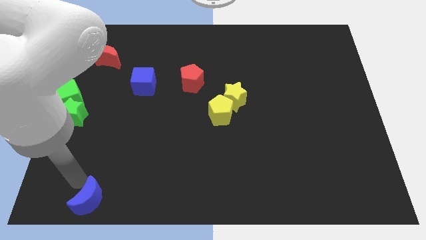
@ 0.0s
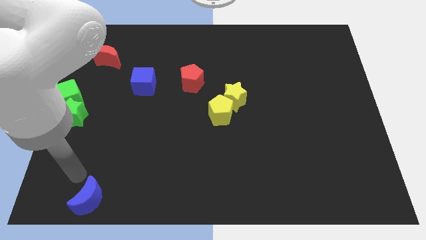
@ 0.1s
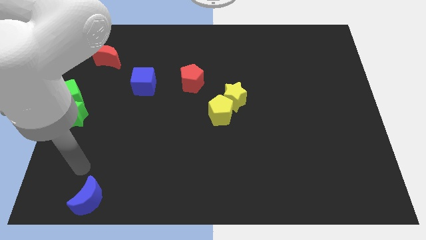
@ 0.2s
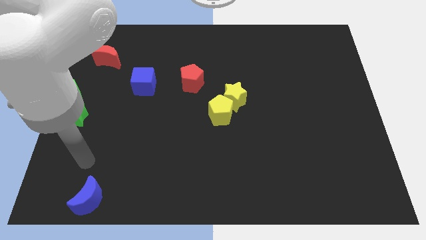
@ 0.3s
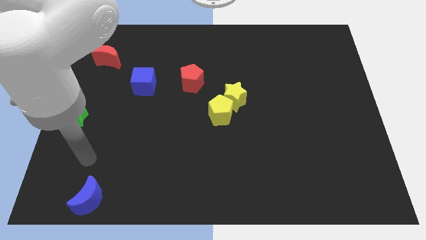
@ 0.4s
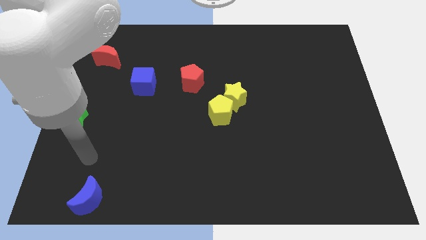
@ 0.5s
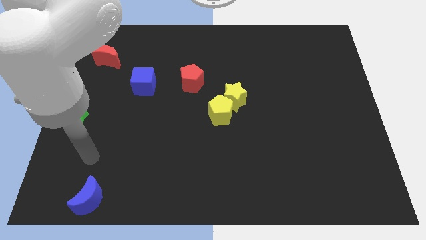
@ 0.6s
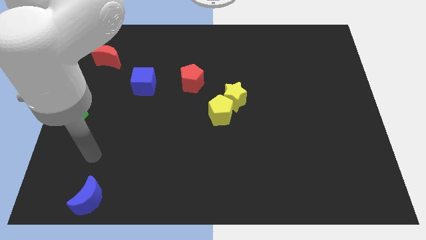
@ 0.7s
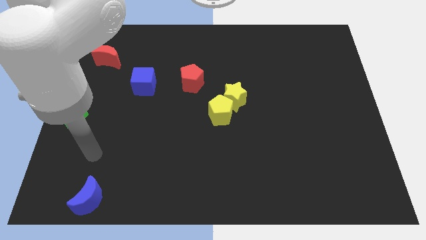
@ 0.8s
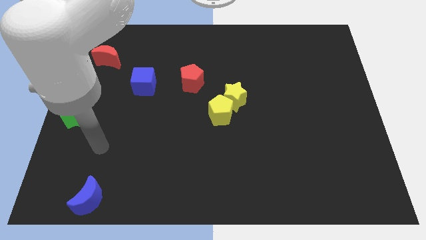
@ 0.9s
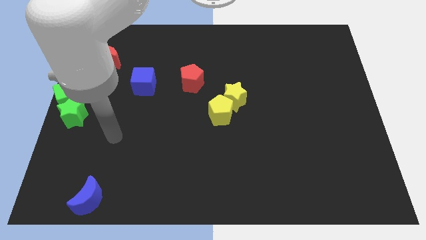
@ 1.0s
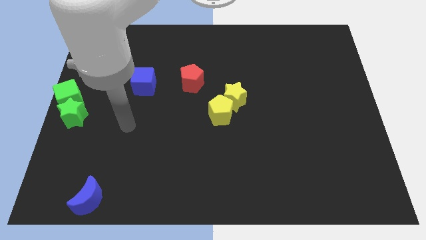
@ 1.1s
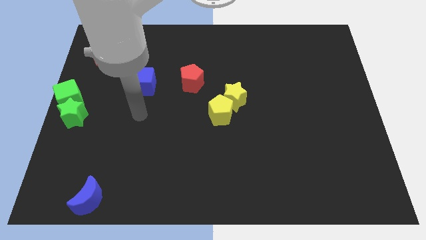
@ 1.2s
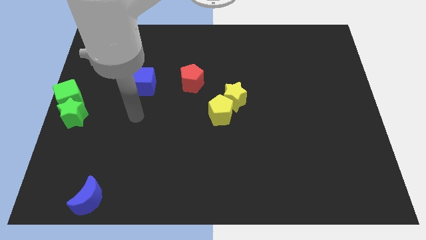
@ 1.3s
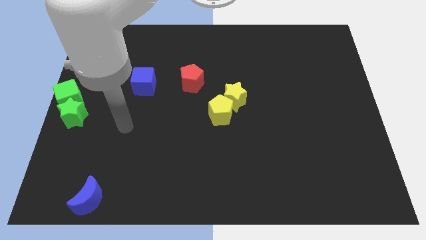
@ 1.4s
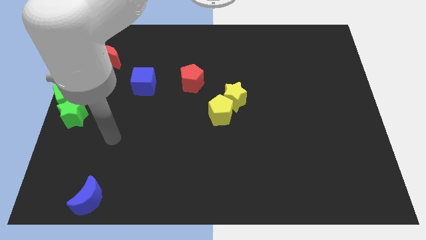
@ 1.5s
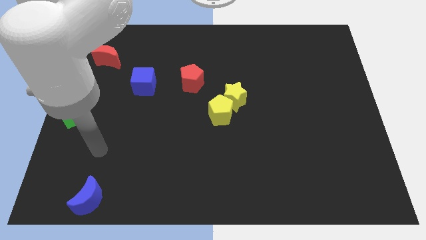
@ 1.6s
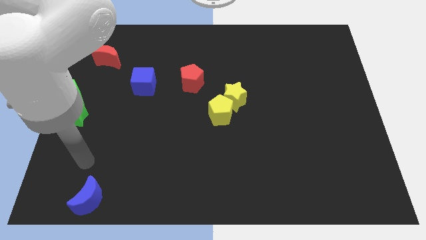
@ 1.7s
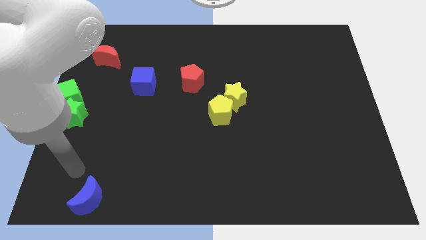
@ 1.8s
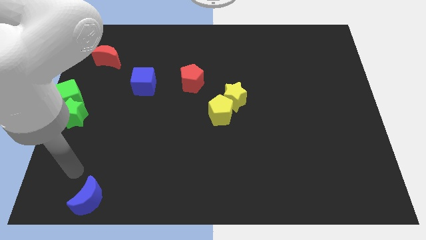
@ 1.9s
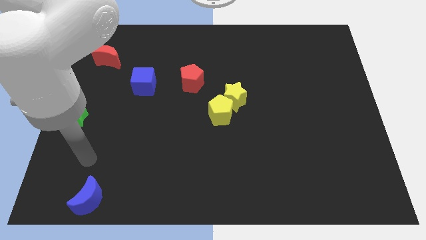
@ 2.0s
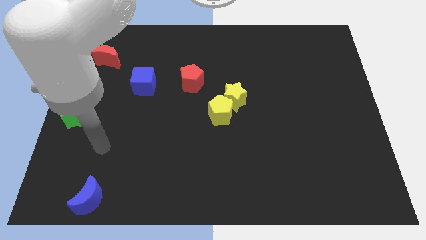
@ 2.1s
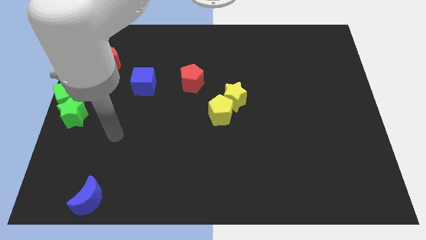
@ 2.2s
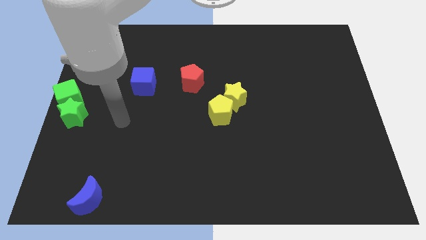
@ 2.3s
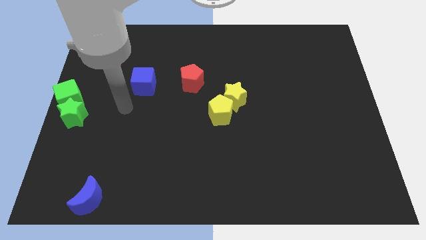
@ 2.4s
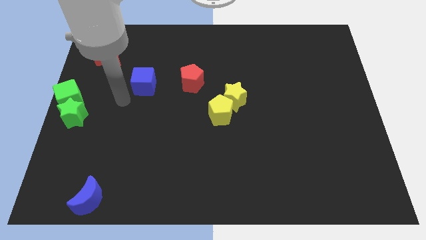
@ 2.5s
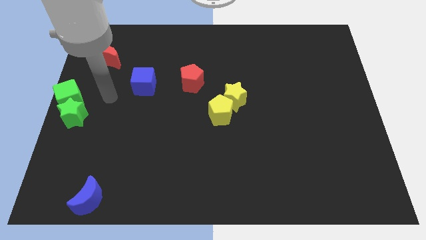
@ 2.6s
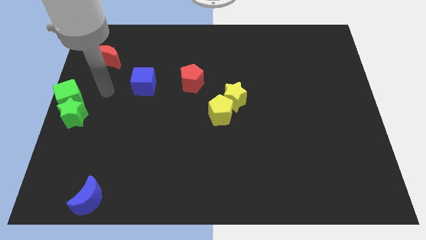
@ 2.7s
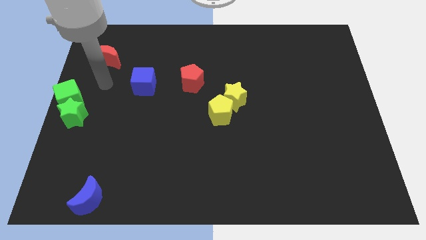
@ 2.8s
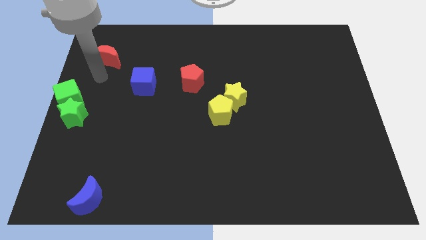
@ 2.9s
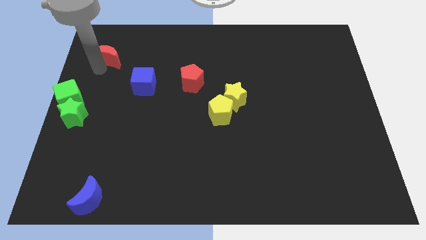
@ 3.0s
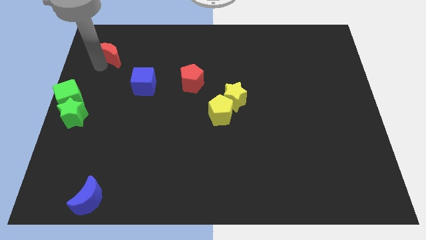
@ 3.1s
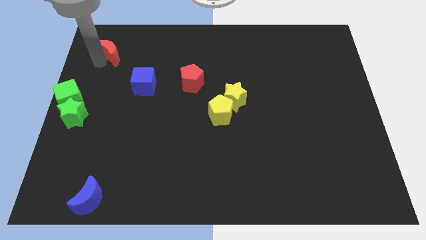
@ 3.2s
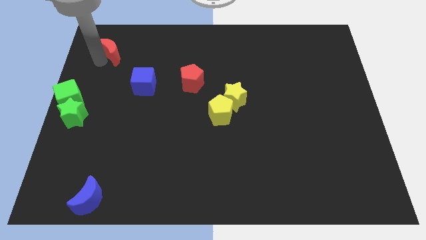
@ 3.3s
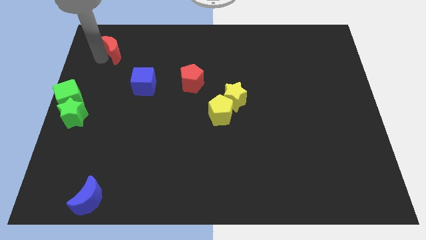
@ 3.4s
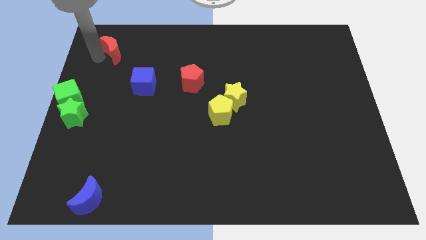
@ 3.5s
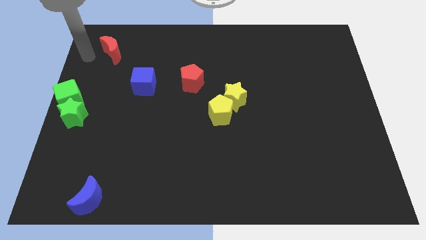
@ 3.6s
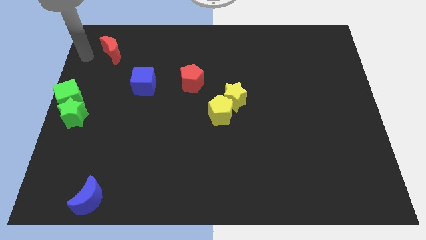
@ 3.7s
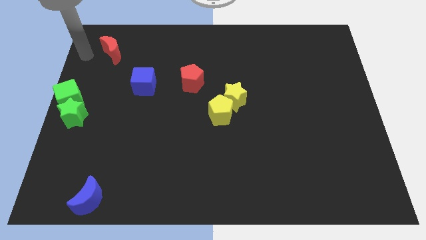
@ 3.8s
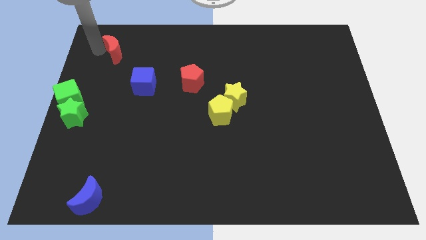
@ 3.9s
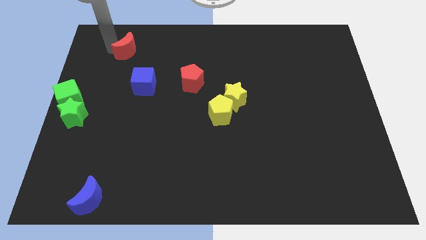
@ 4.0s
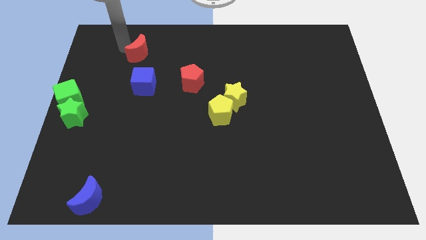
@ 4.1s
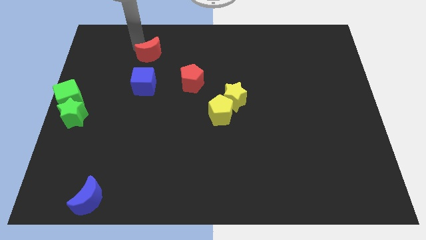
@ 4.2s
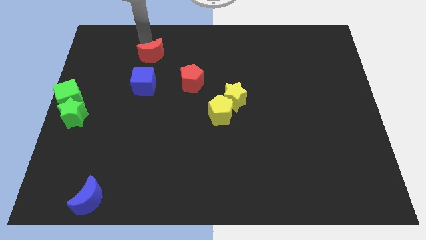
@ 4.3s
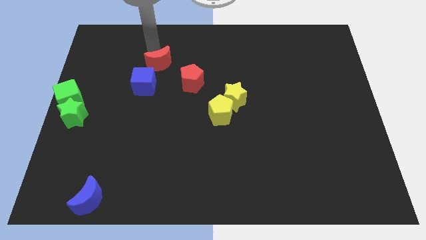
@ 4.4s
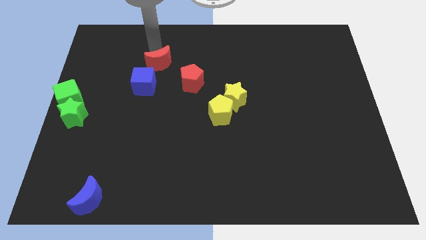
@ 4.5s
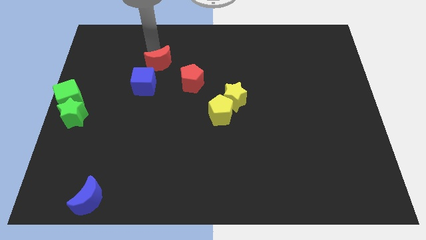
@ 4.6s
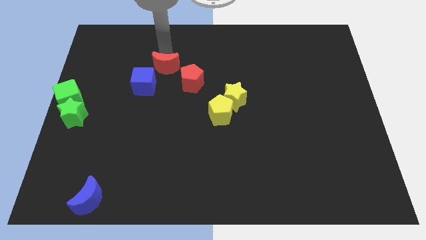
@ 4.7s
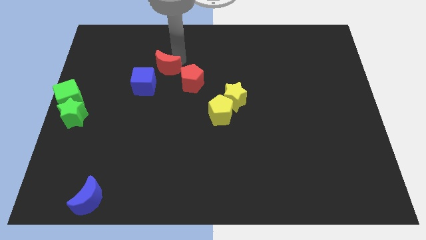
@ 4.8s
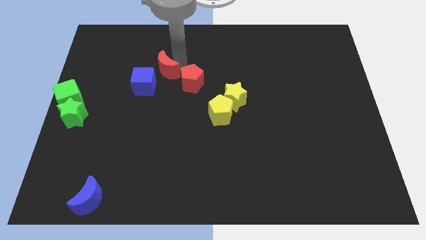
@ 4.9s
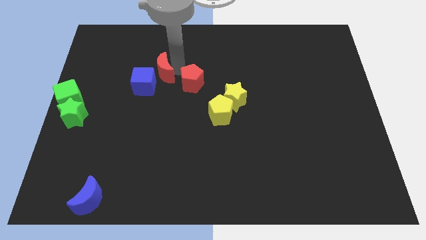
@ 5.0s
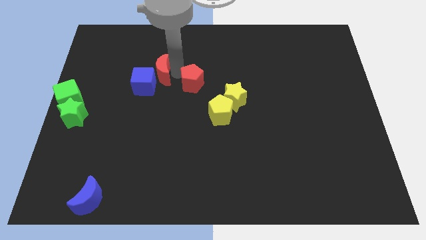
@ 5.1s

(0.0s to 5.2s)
move the red moon top right above the blue cube

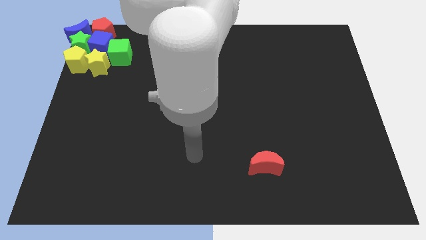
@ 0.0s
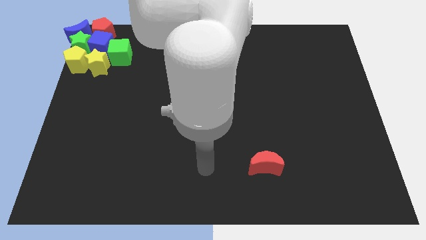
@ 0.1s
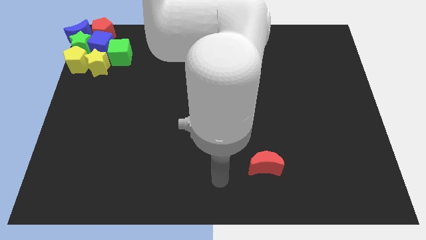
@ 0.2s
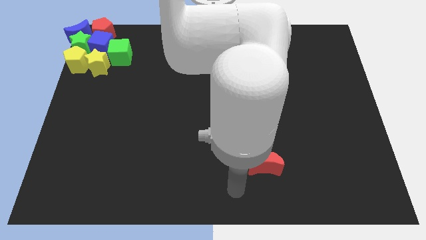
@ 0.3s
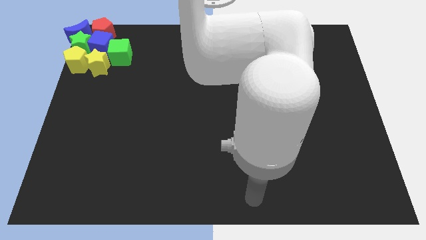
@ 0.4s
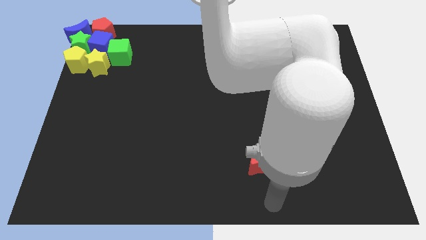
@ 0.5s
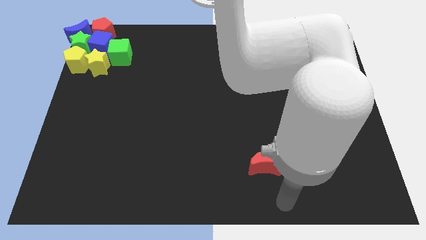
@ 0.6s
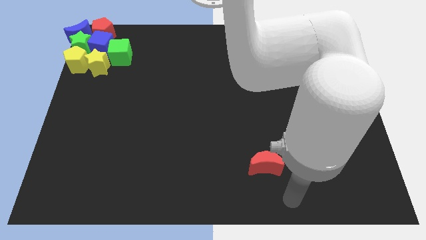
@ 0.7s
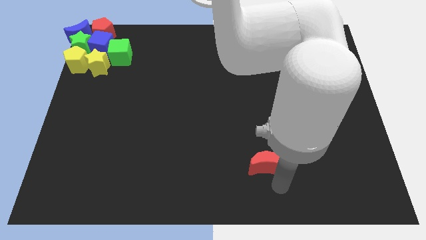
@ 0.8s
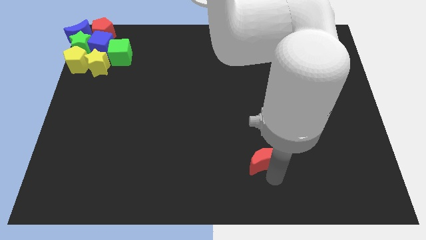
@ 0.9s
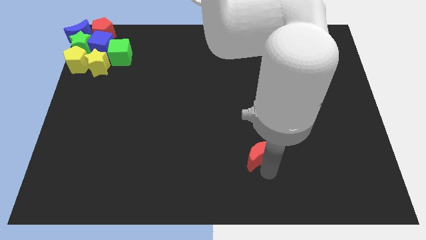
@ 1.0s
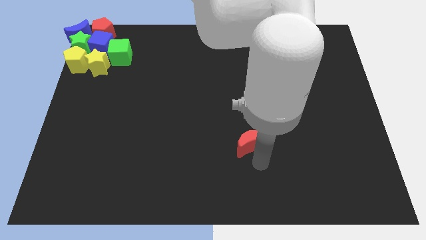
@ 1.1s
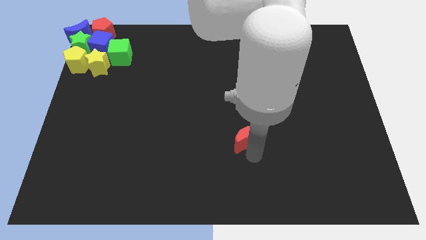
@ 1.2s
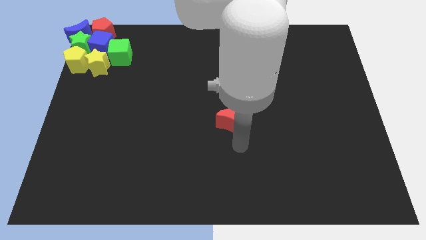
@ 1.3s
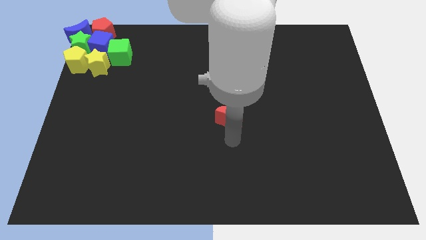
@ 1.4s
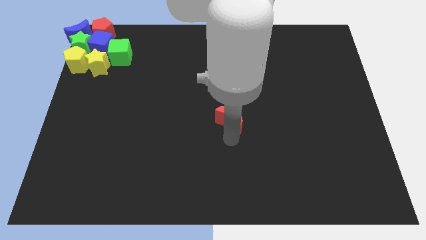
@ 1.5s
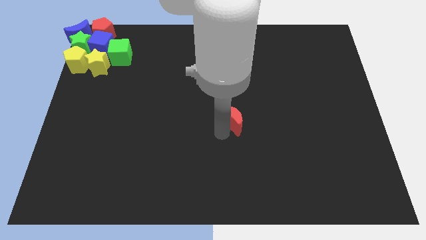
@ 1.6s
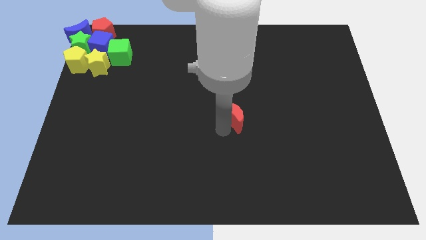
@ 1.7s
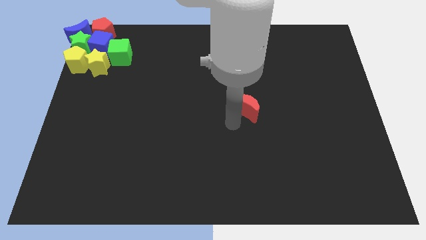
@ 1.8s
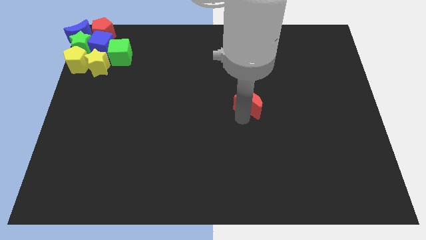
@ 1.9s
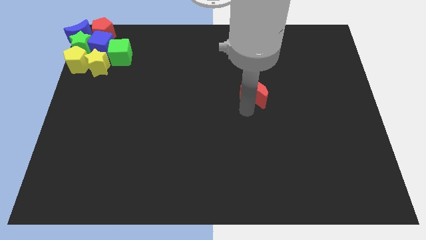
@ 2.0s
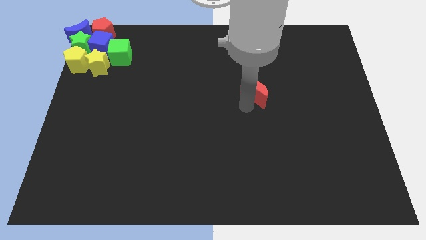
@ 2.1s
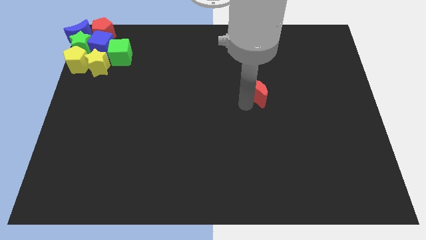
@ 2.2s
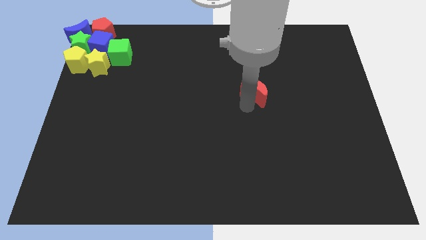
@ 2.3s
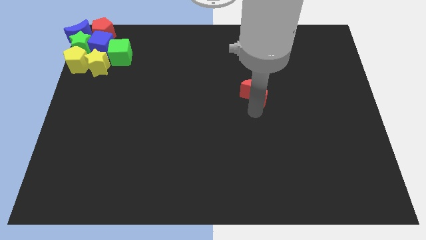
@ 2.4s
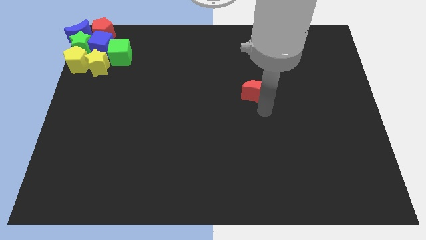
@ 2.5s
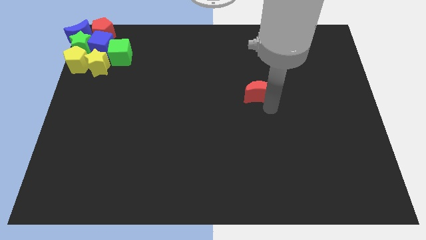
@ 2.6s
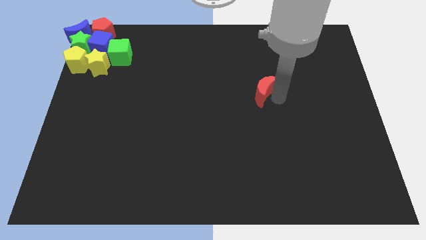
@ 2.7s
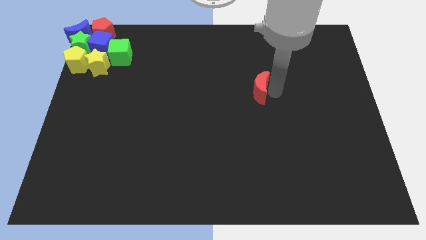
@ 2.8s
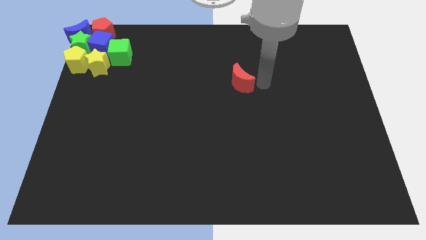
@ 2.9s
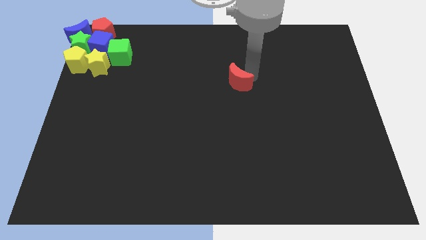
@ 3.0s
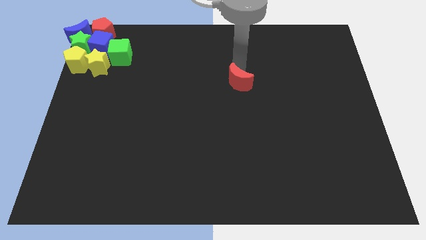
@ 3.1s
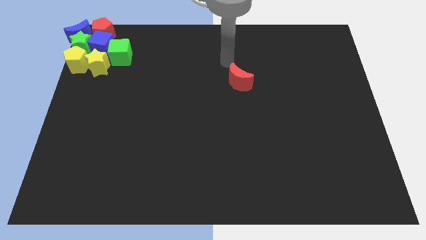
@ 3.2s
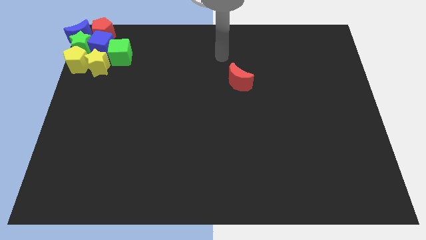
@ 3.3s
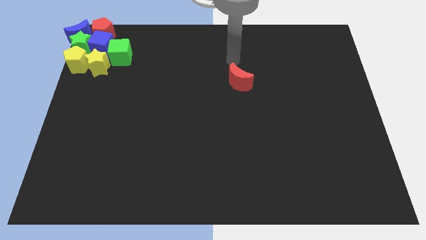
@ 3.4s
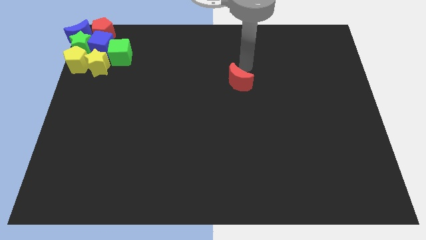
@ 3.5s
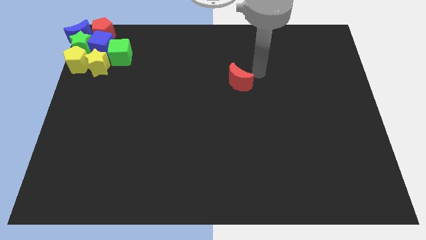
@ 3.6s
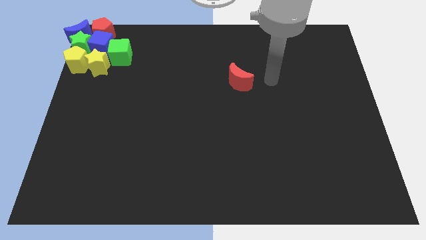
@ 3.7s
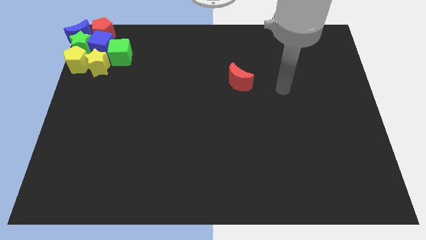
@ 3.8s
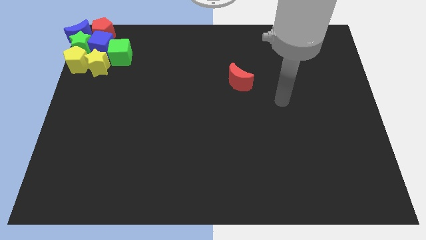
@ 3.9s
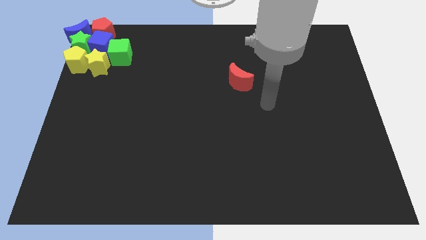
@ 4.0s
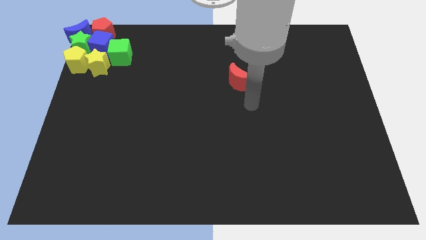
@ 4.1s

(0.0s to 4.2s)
push the red moon to the top center of the board
